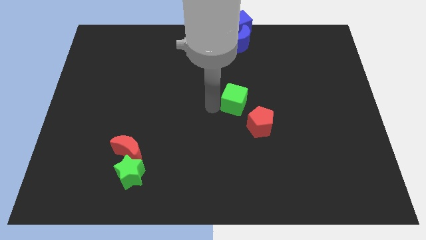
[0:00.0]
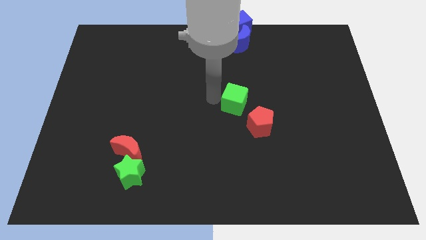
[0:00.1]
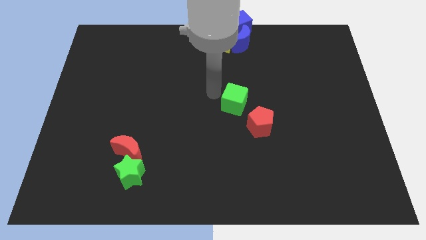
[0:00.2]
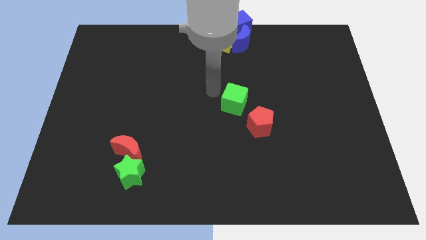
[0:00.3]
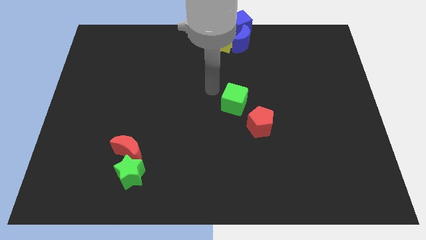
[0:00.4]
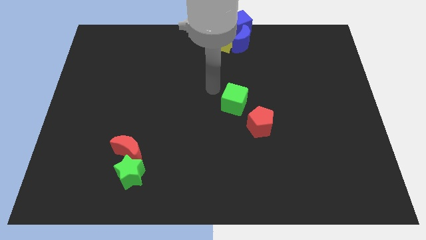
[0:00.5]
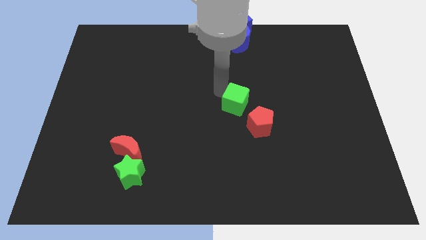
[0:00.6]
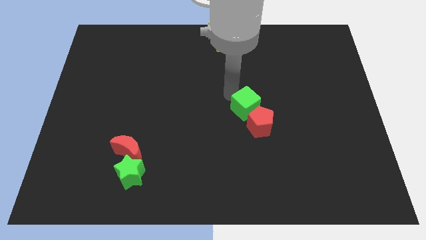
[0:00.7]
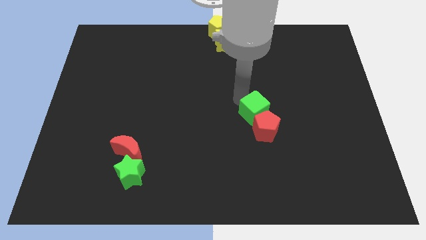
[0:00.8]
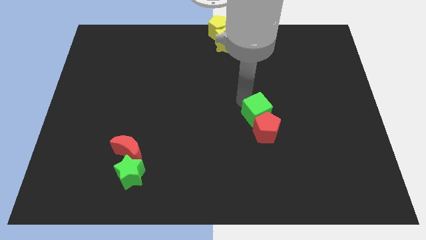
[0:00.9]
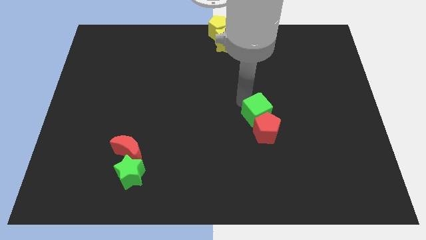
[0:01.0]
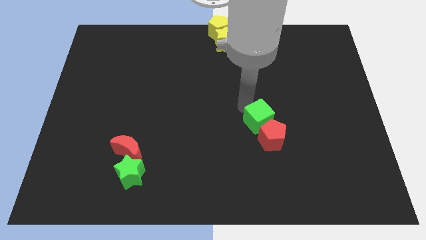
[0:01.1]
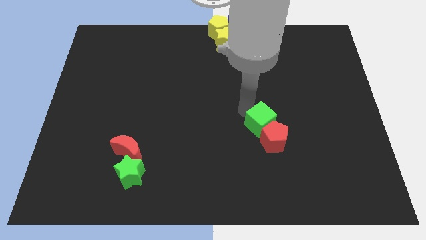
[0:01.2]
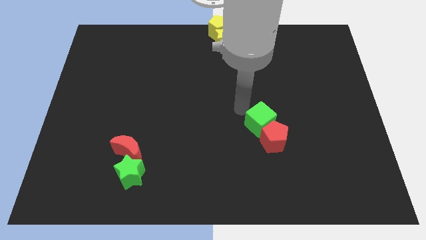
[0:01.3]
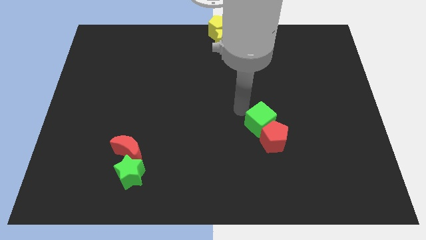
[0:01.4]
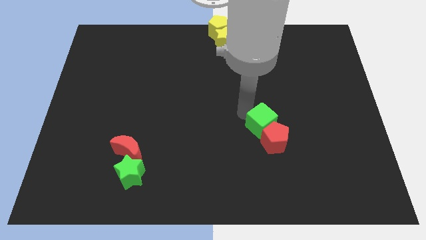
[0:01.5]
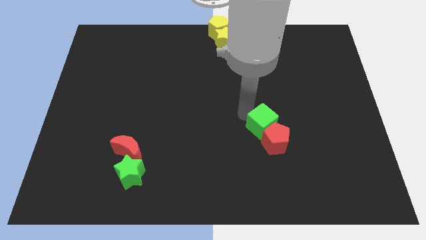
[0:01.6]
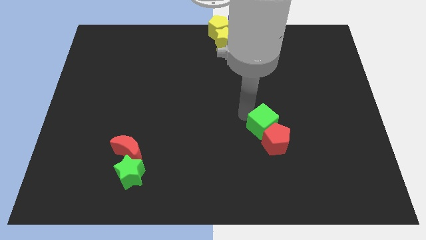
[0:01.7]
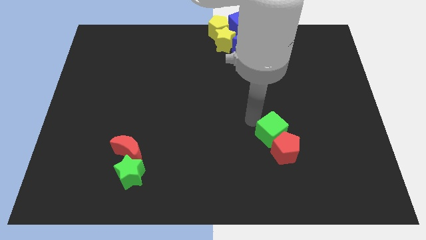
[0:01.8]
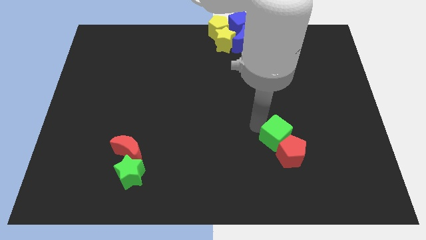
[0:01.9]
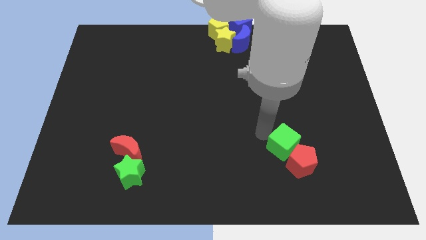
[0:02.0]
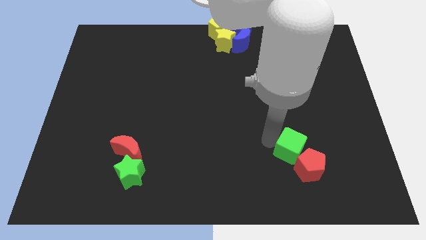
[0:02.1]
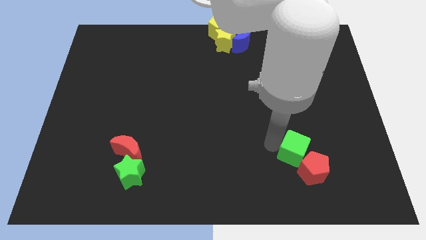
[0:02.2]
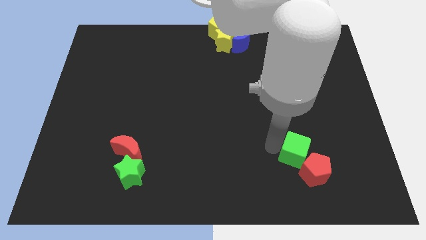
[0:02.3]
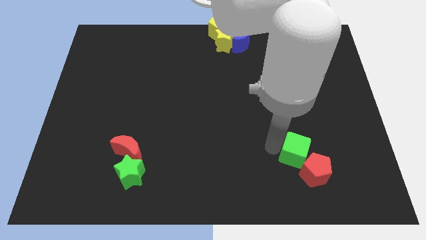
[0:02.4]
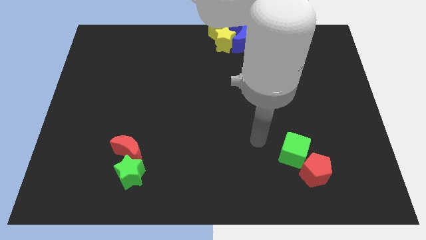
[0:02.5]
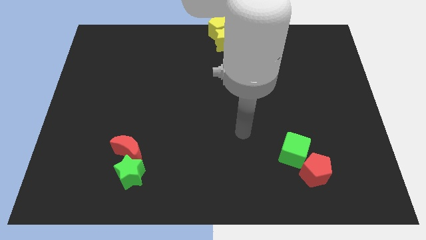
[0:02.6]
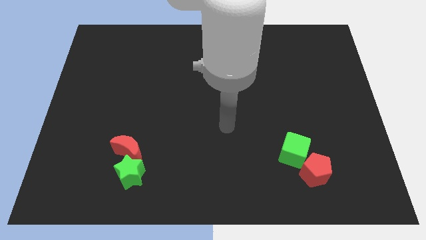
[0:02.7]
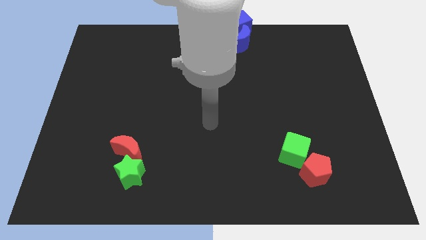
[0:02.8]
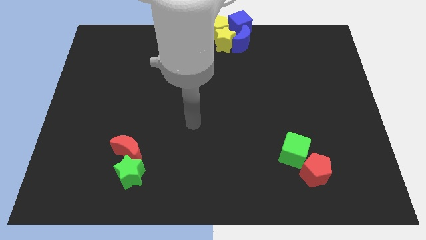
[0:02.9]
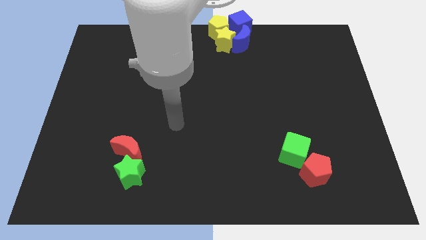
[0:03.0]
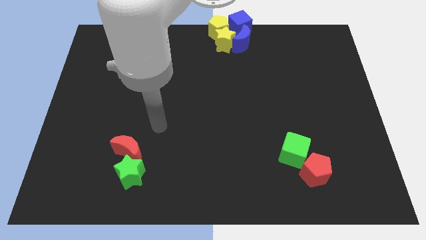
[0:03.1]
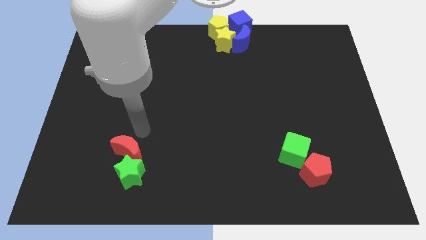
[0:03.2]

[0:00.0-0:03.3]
push the green cube into the red pentagon towards the bottom right

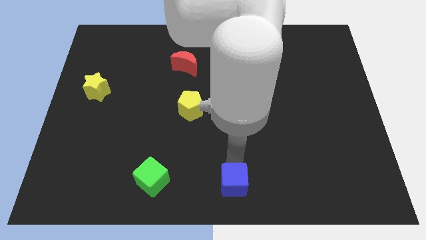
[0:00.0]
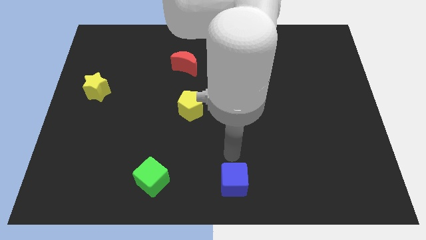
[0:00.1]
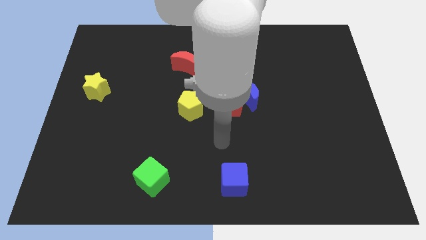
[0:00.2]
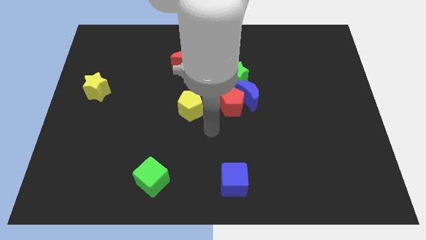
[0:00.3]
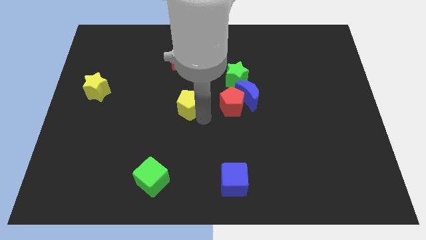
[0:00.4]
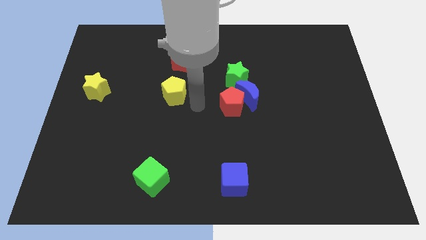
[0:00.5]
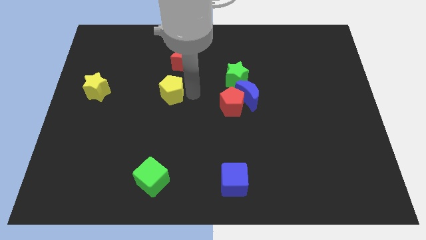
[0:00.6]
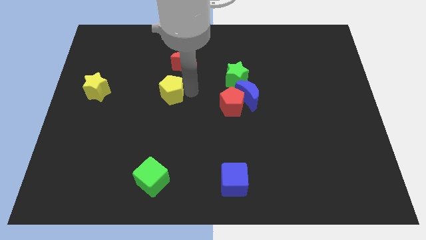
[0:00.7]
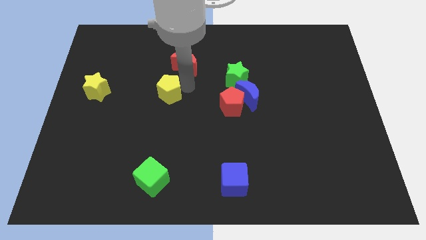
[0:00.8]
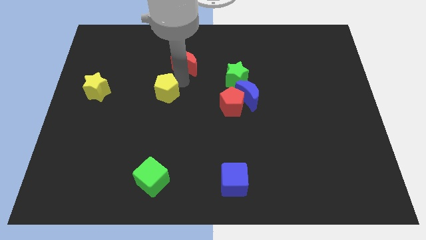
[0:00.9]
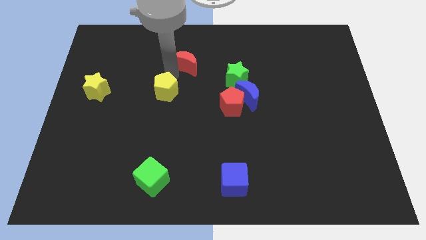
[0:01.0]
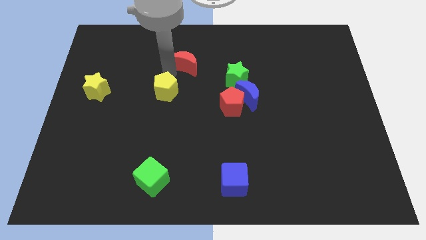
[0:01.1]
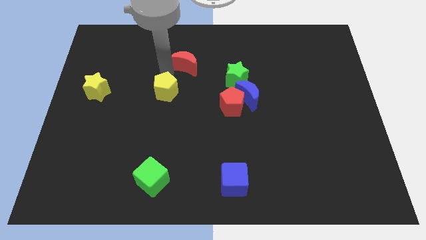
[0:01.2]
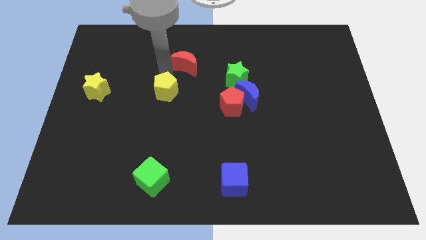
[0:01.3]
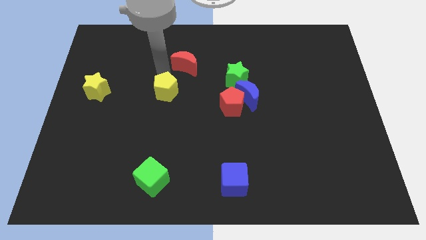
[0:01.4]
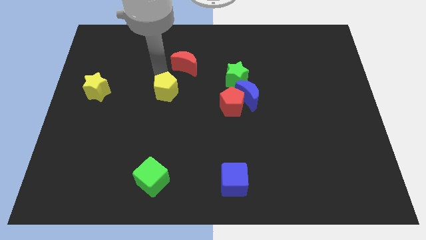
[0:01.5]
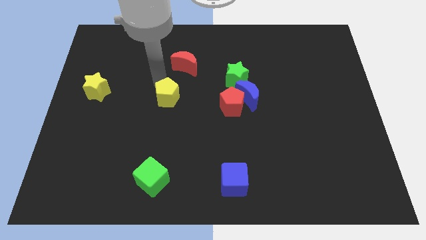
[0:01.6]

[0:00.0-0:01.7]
point your arm above the yellow pentagon

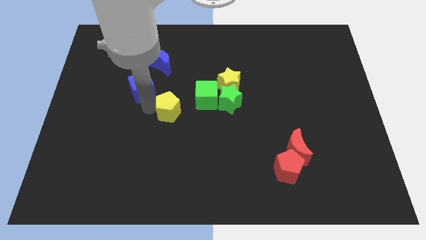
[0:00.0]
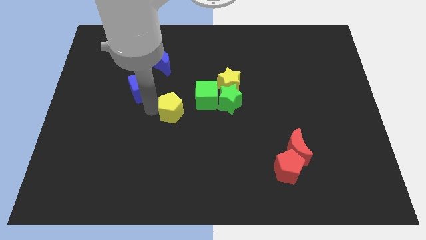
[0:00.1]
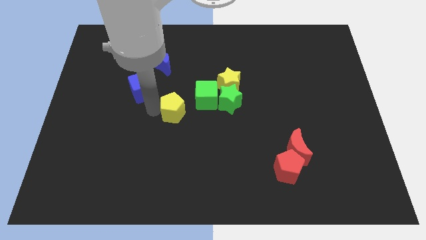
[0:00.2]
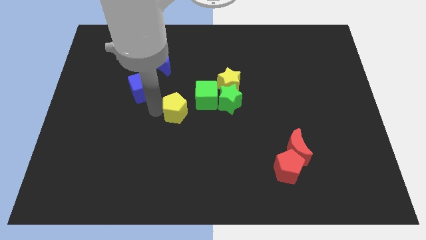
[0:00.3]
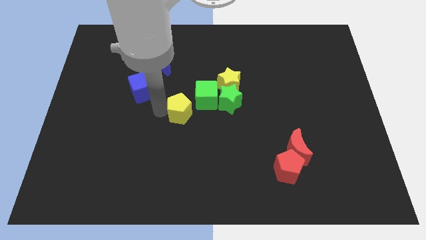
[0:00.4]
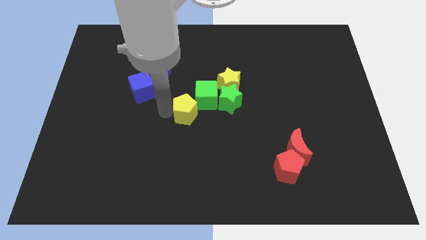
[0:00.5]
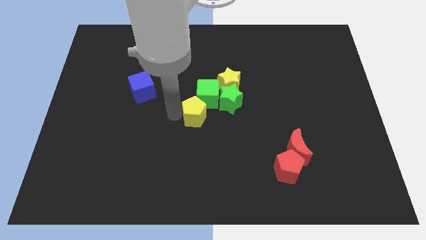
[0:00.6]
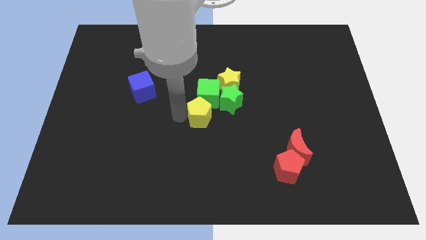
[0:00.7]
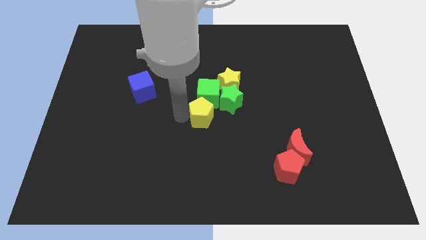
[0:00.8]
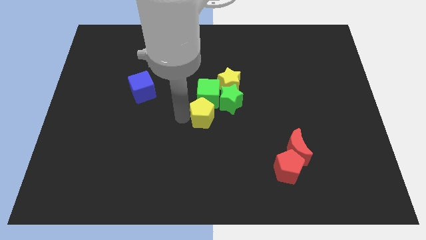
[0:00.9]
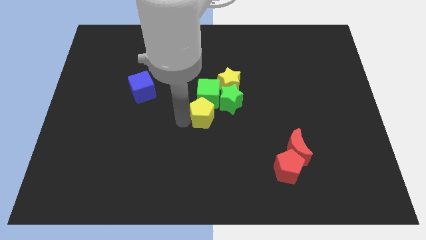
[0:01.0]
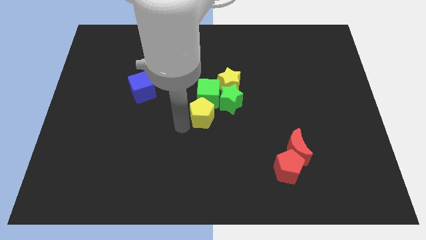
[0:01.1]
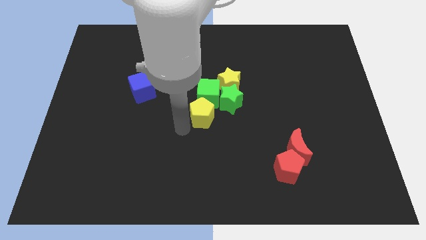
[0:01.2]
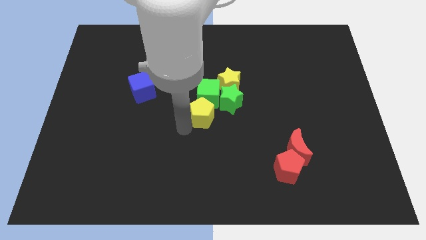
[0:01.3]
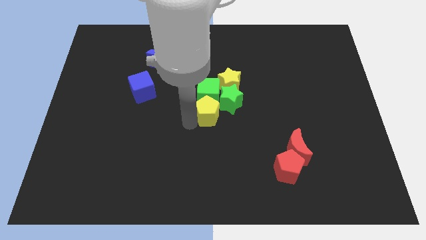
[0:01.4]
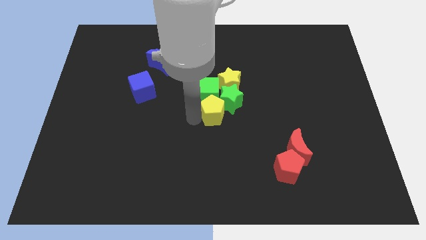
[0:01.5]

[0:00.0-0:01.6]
move the yellow pentagon to the bottom of the green cube

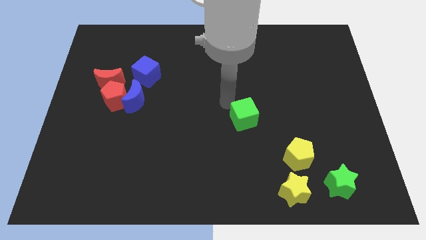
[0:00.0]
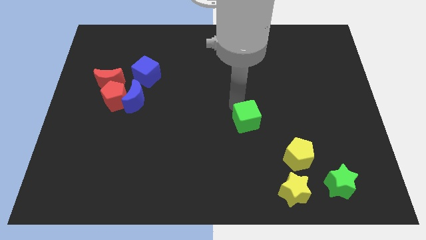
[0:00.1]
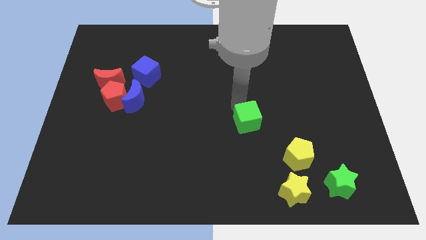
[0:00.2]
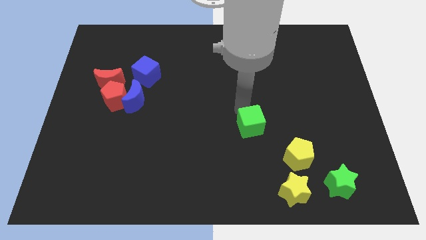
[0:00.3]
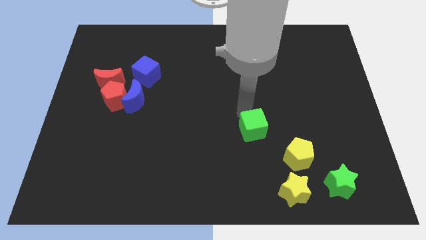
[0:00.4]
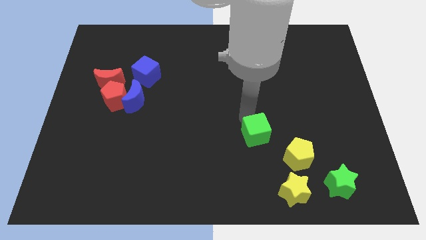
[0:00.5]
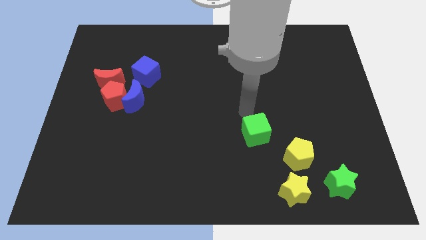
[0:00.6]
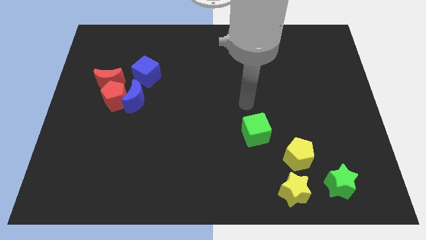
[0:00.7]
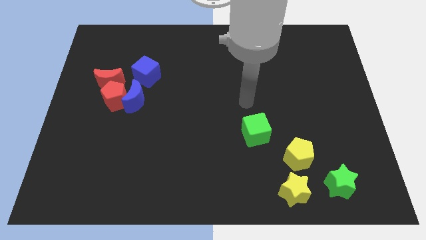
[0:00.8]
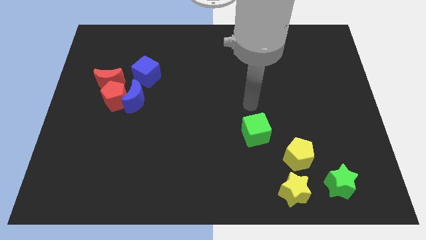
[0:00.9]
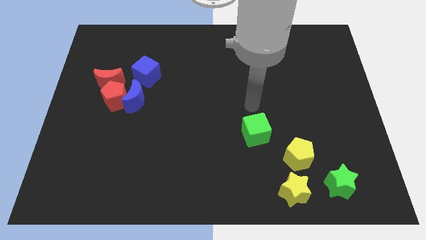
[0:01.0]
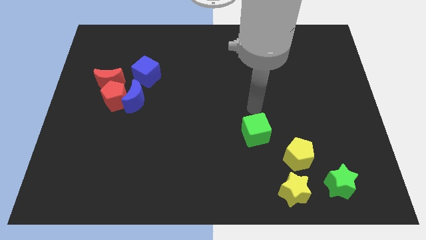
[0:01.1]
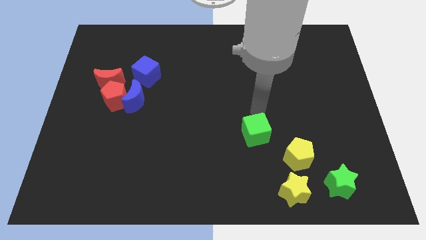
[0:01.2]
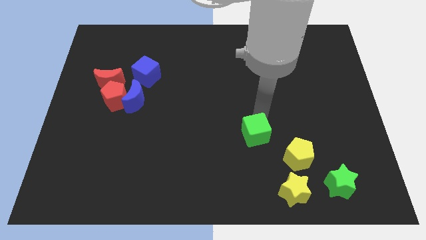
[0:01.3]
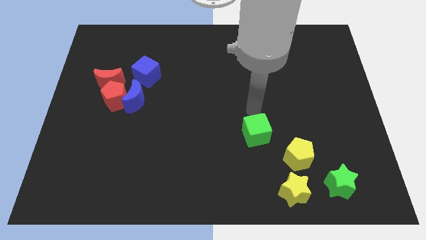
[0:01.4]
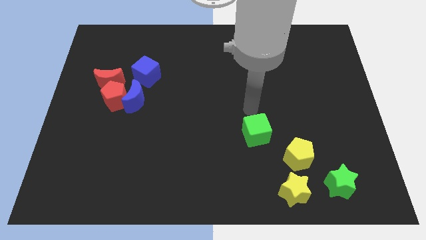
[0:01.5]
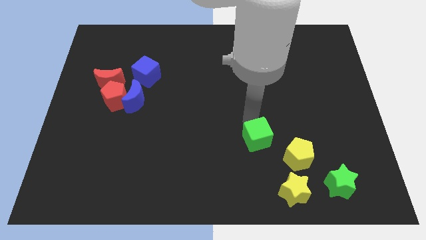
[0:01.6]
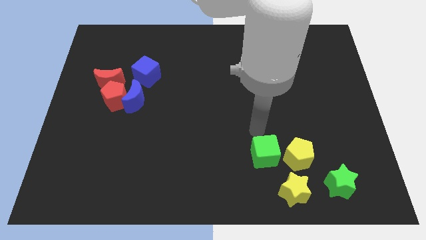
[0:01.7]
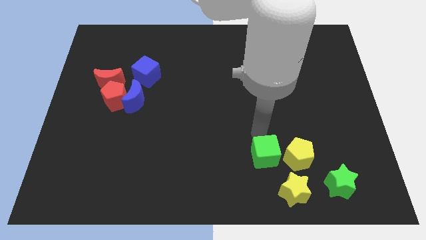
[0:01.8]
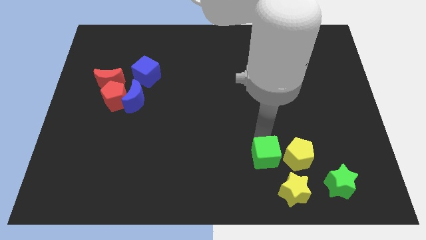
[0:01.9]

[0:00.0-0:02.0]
place the green cube to the left side of the yellow pentagon

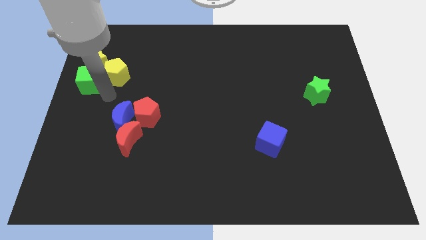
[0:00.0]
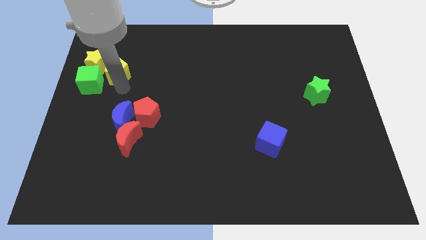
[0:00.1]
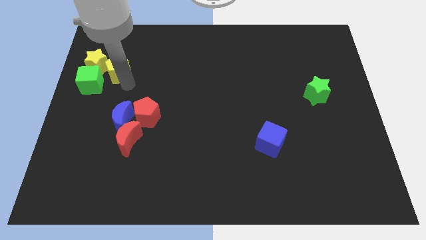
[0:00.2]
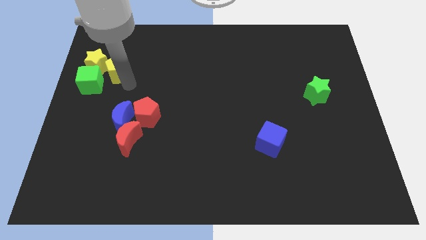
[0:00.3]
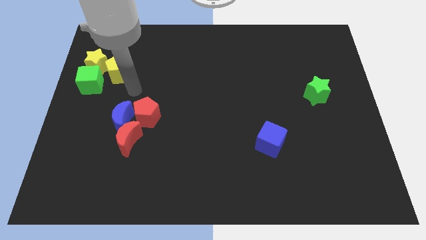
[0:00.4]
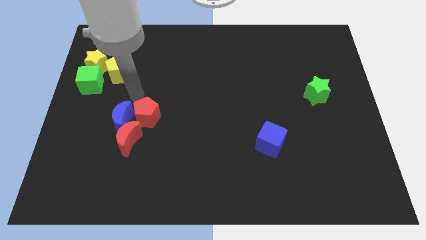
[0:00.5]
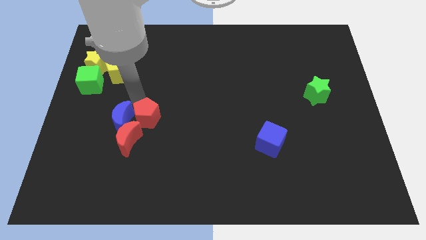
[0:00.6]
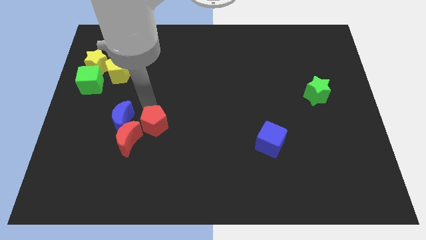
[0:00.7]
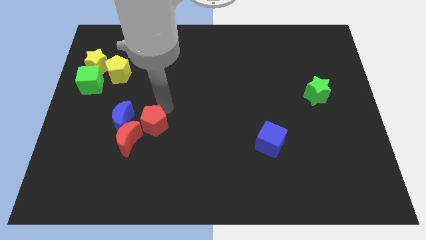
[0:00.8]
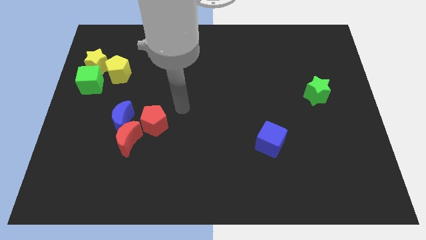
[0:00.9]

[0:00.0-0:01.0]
push red pentagon slightly down
